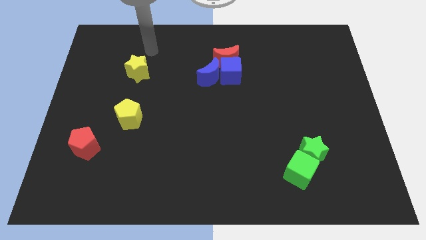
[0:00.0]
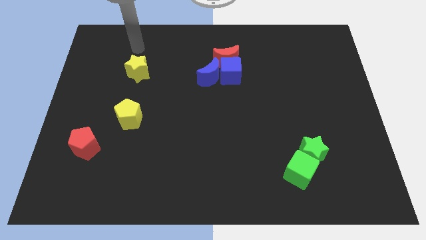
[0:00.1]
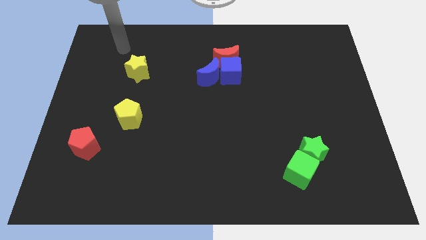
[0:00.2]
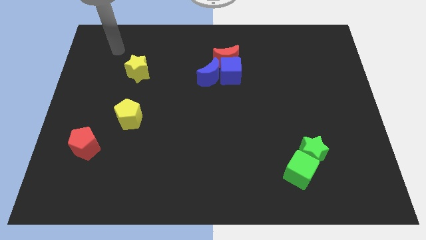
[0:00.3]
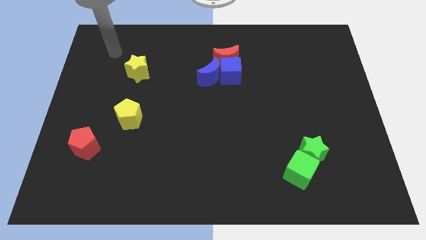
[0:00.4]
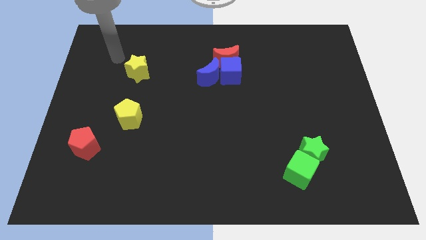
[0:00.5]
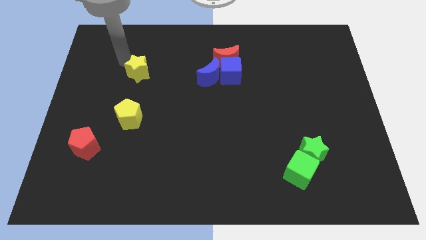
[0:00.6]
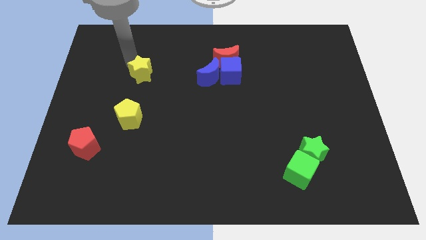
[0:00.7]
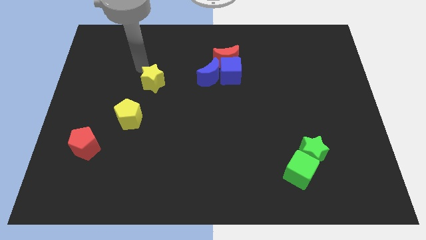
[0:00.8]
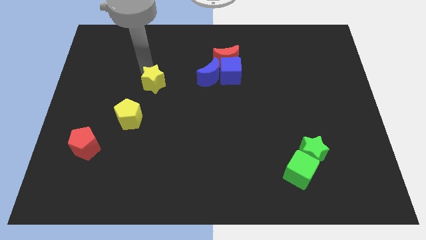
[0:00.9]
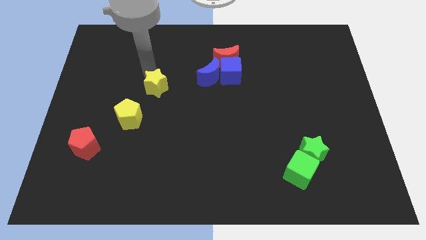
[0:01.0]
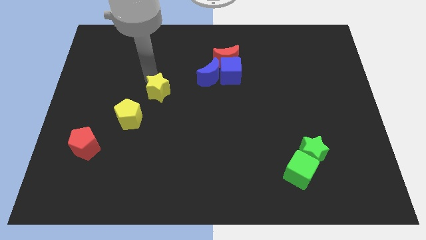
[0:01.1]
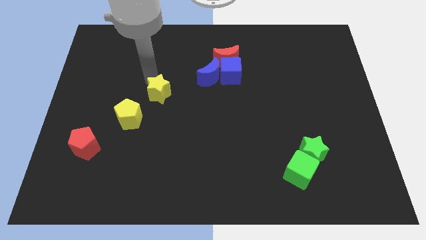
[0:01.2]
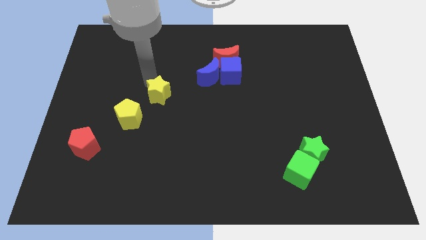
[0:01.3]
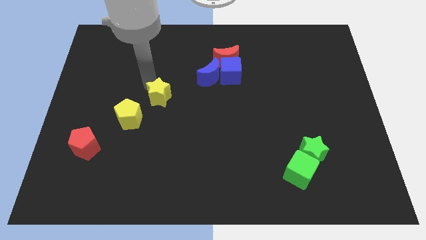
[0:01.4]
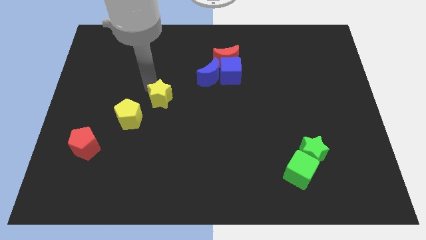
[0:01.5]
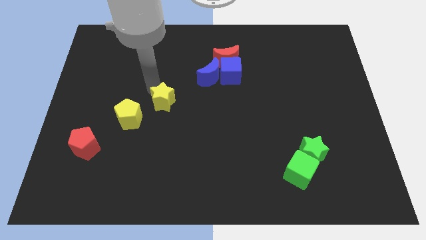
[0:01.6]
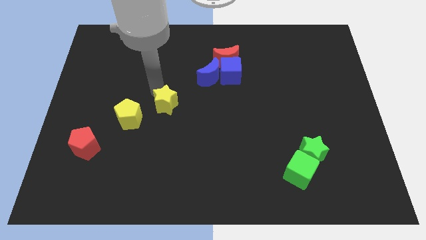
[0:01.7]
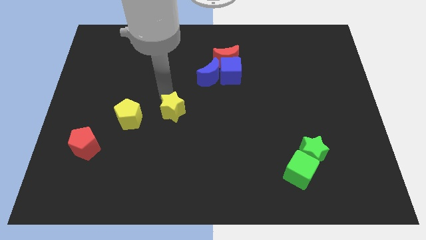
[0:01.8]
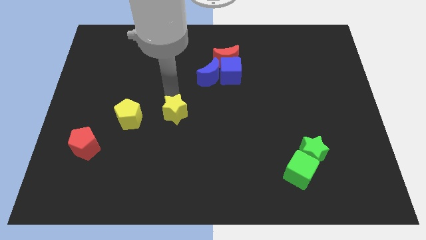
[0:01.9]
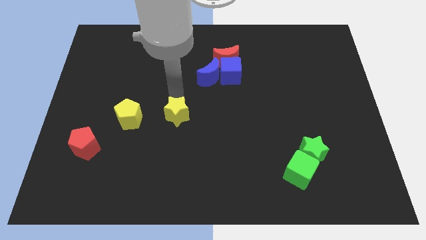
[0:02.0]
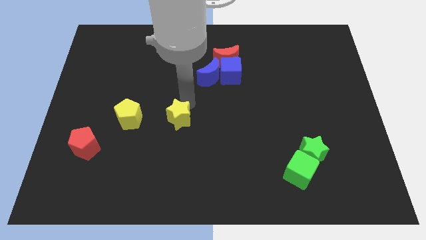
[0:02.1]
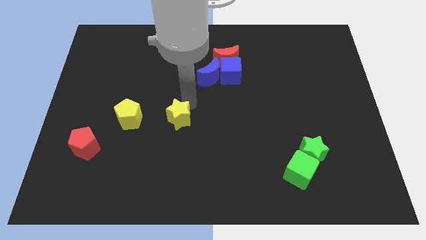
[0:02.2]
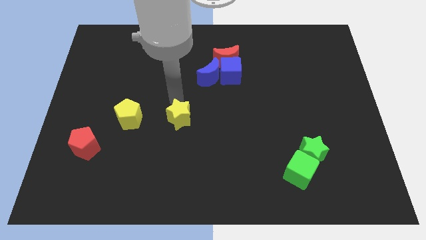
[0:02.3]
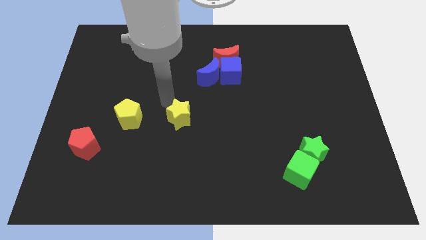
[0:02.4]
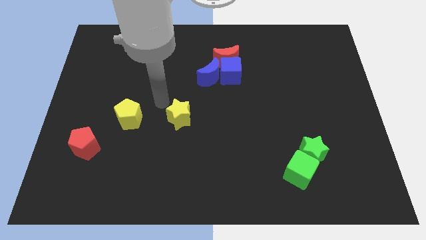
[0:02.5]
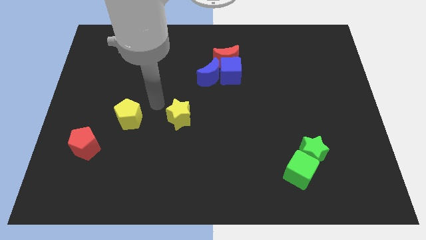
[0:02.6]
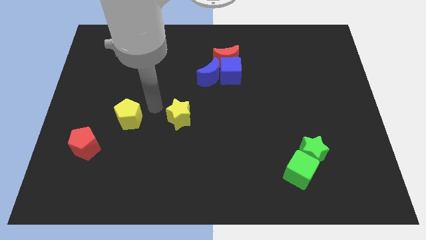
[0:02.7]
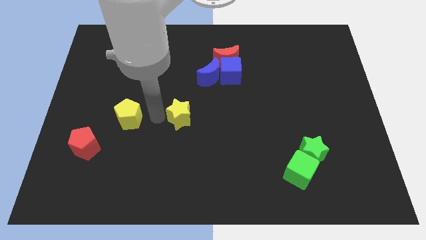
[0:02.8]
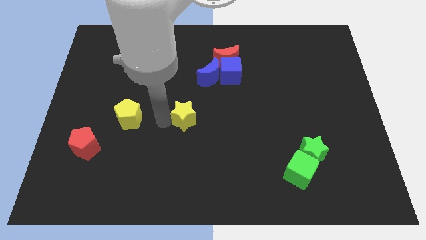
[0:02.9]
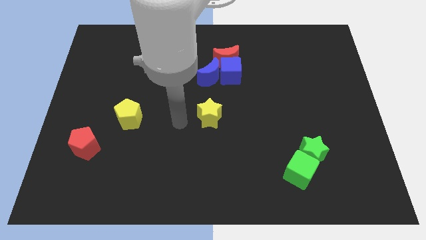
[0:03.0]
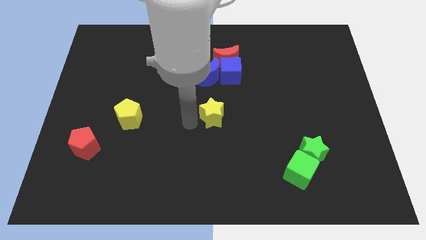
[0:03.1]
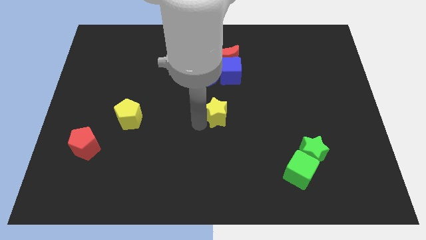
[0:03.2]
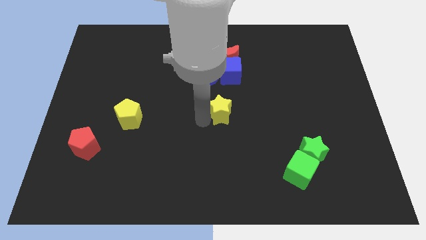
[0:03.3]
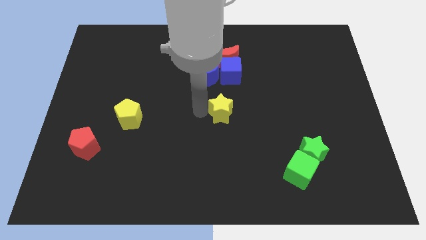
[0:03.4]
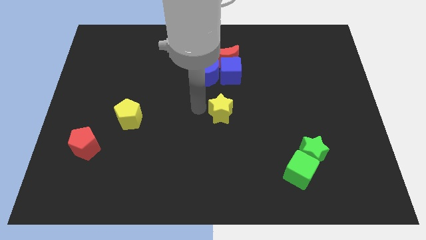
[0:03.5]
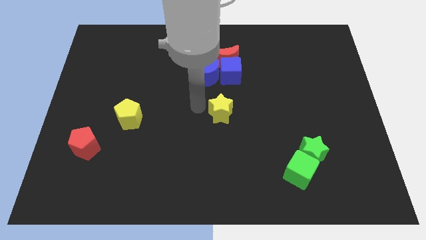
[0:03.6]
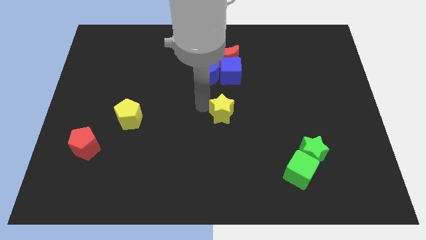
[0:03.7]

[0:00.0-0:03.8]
place the yellow star below the blue cube

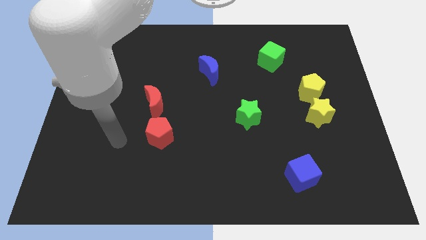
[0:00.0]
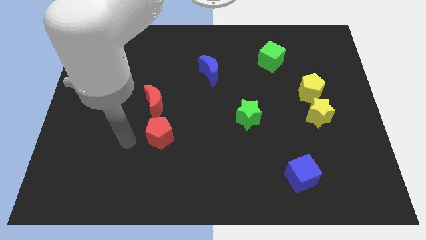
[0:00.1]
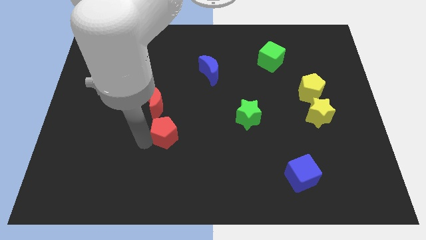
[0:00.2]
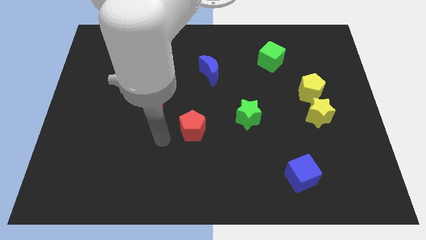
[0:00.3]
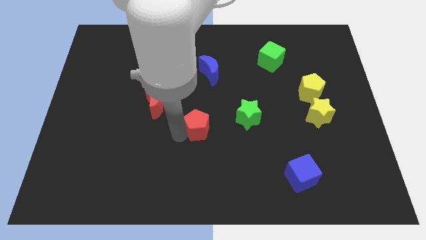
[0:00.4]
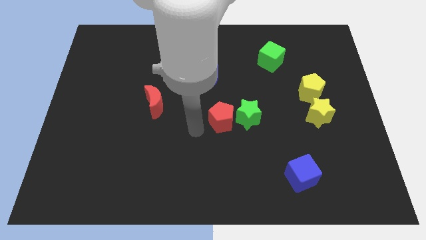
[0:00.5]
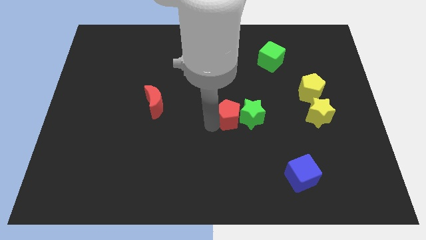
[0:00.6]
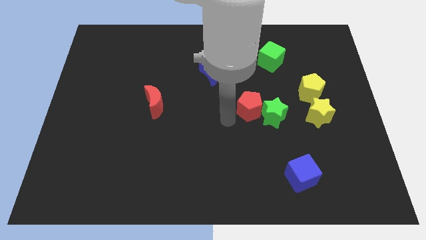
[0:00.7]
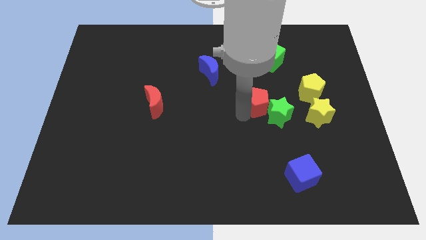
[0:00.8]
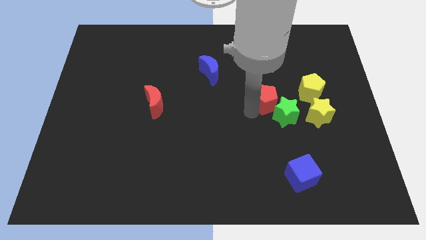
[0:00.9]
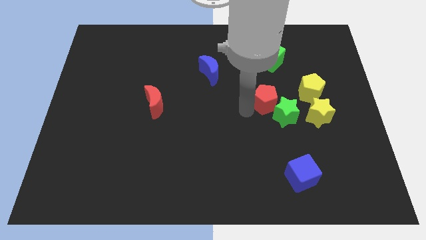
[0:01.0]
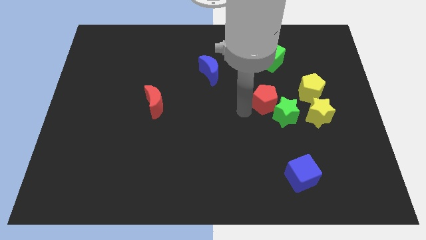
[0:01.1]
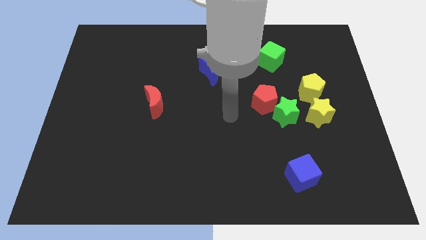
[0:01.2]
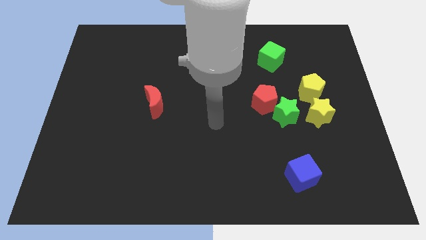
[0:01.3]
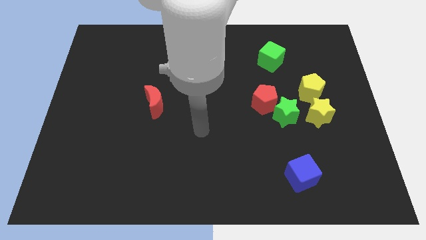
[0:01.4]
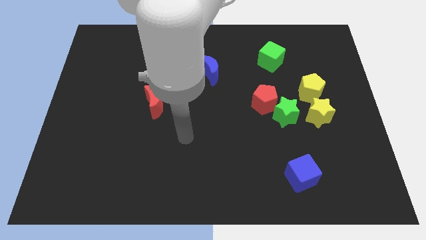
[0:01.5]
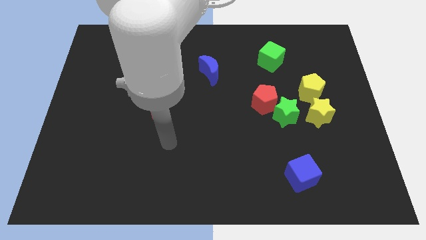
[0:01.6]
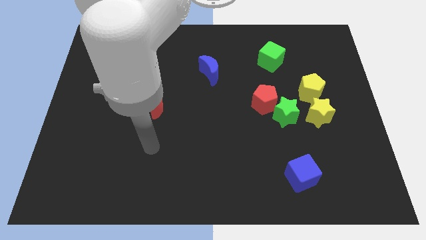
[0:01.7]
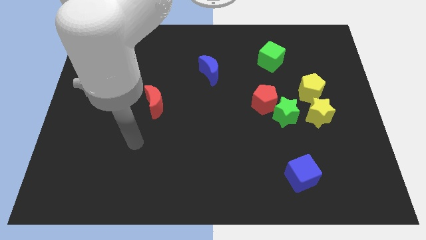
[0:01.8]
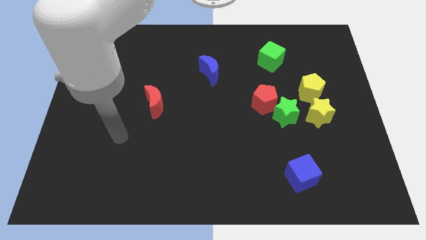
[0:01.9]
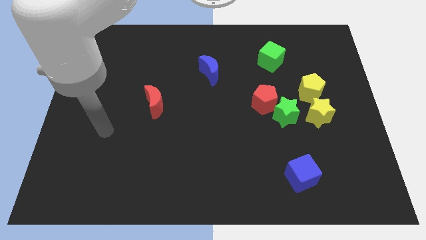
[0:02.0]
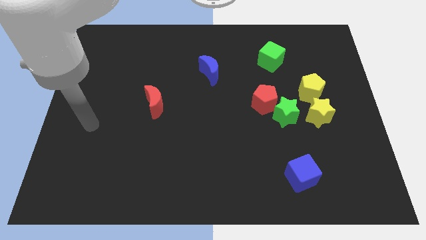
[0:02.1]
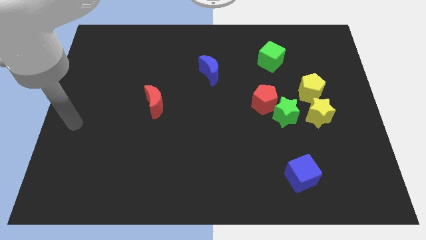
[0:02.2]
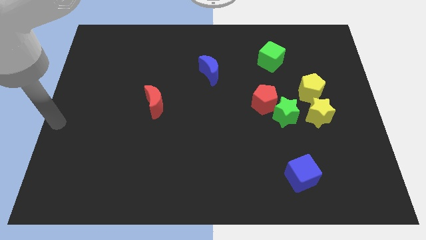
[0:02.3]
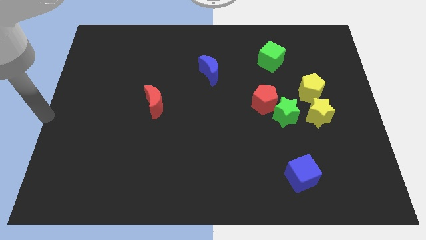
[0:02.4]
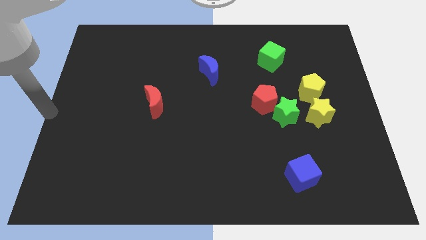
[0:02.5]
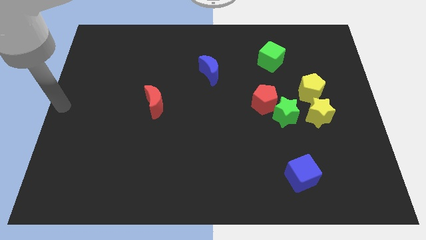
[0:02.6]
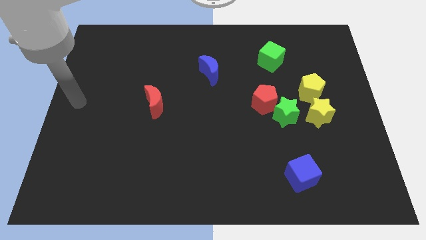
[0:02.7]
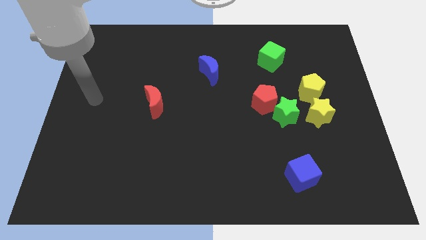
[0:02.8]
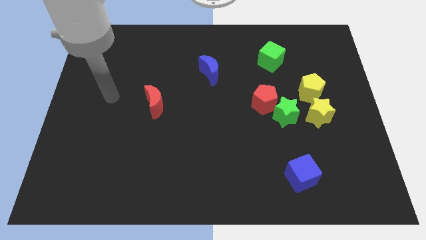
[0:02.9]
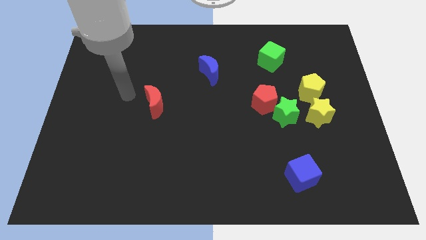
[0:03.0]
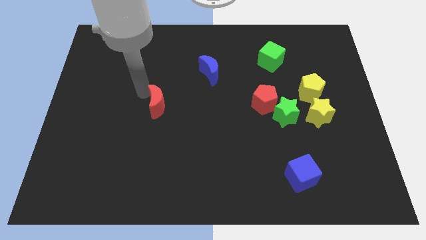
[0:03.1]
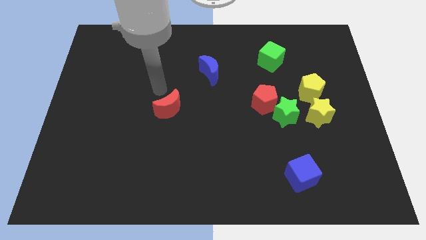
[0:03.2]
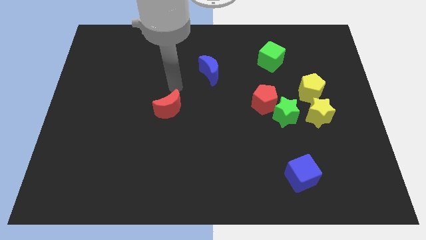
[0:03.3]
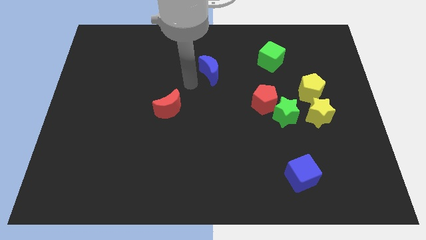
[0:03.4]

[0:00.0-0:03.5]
move the red blocks to the left of the board

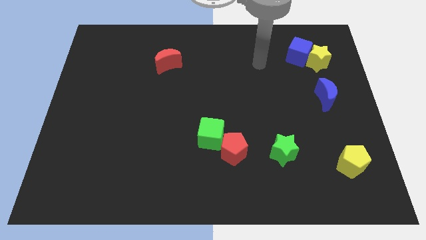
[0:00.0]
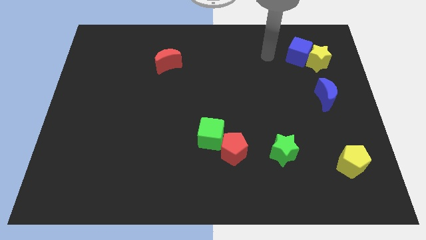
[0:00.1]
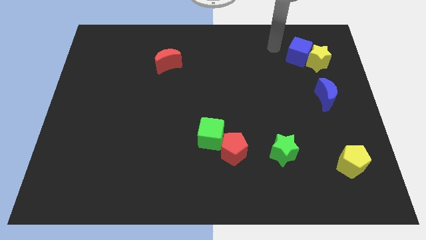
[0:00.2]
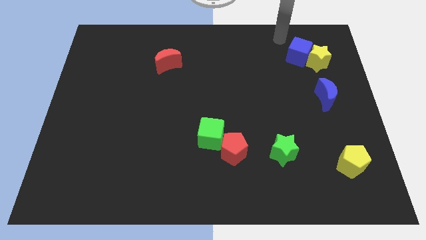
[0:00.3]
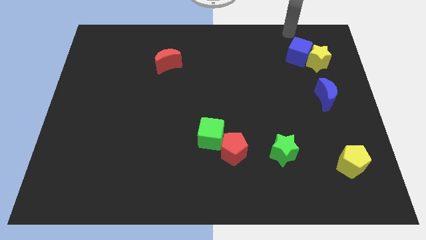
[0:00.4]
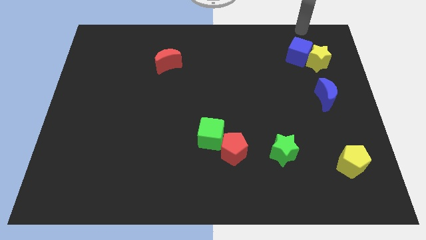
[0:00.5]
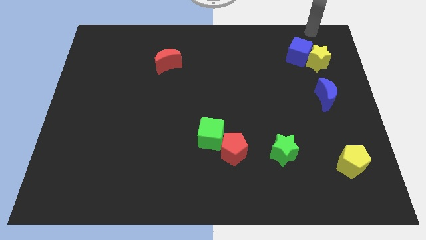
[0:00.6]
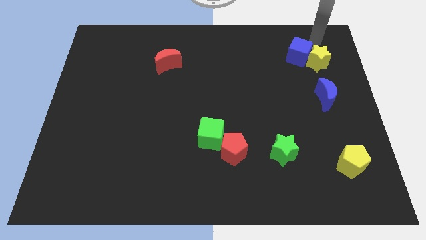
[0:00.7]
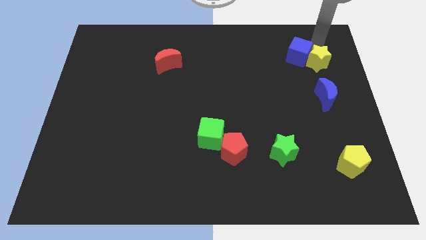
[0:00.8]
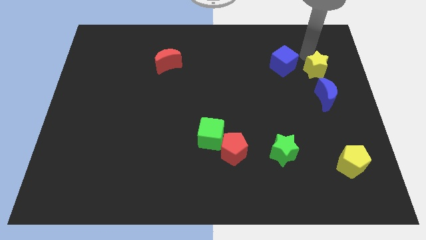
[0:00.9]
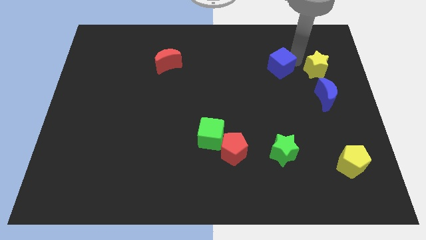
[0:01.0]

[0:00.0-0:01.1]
separate the blue cube from the yellow star

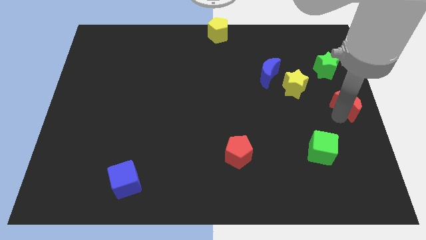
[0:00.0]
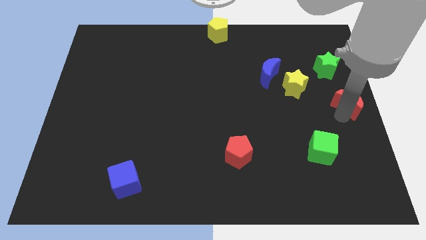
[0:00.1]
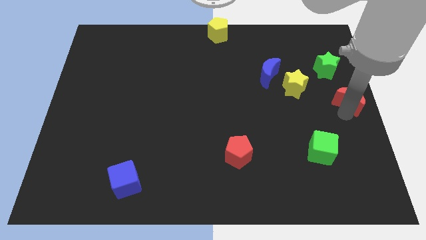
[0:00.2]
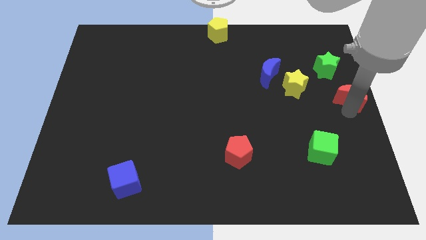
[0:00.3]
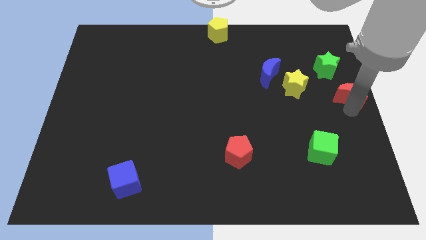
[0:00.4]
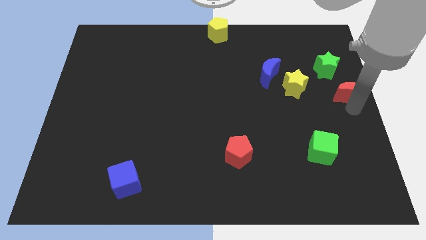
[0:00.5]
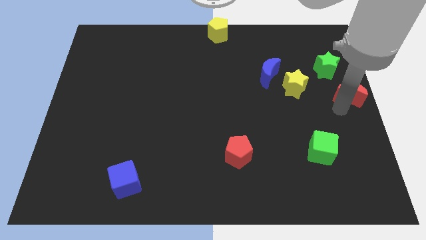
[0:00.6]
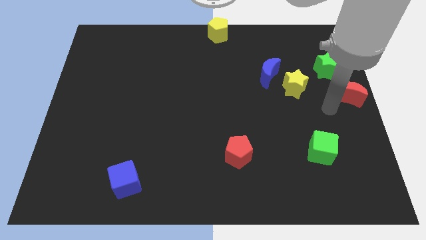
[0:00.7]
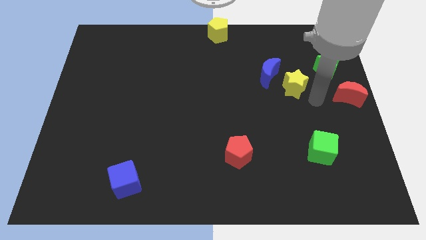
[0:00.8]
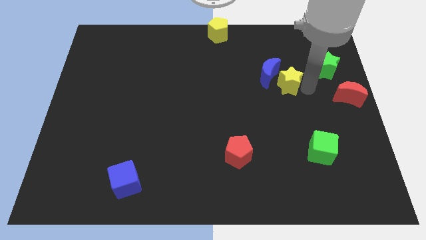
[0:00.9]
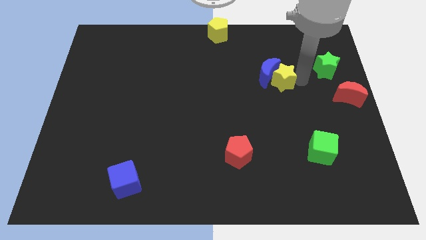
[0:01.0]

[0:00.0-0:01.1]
point your arm right to yellow star
